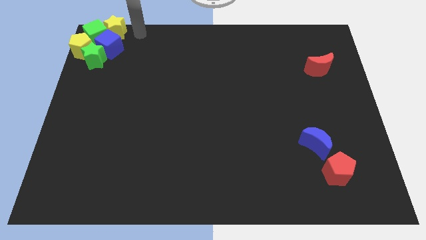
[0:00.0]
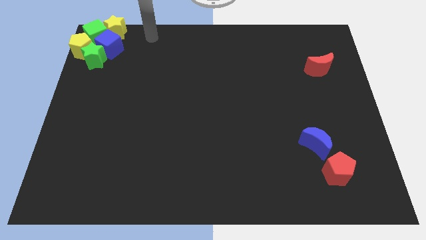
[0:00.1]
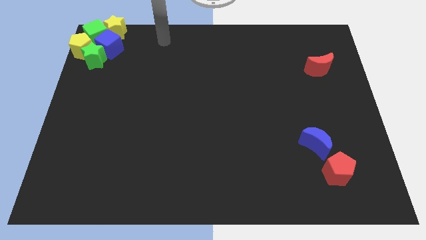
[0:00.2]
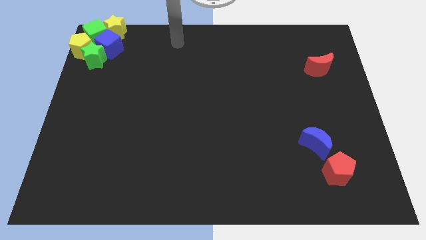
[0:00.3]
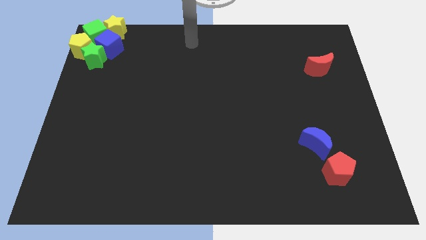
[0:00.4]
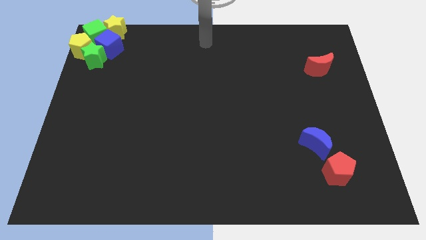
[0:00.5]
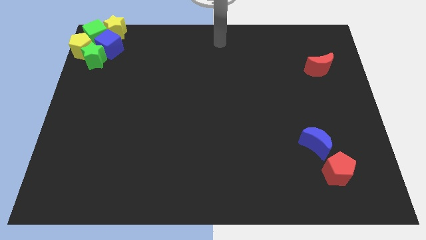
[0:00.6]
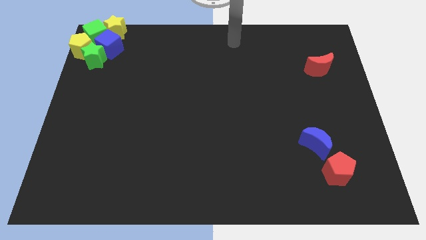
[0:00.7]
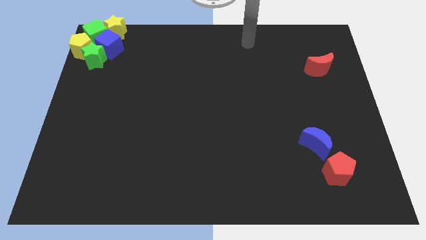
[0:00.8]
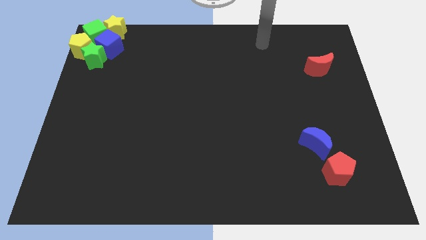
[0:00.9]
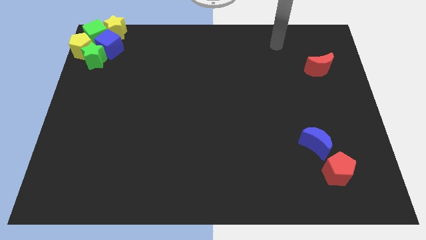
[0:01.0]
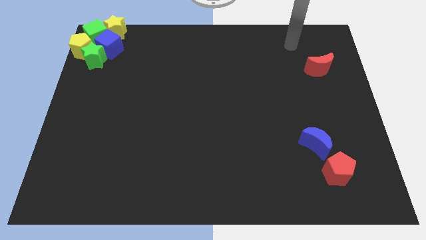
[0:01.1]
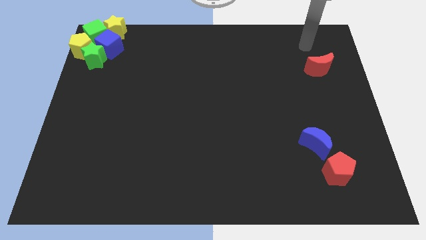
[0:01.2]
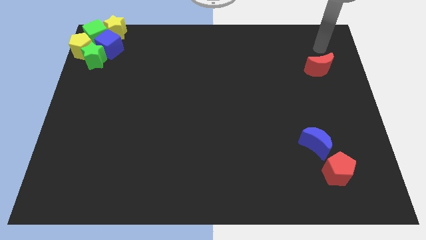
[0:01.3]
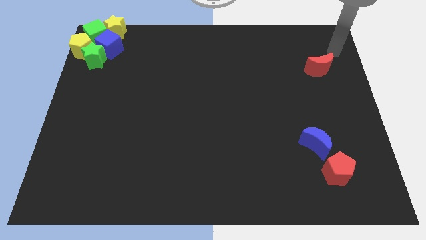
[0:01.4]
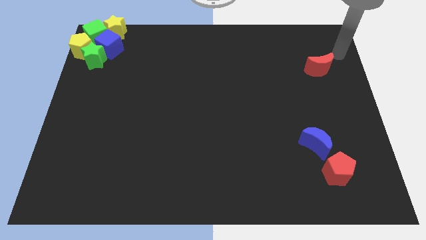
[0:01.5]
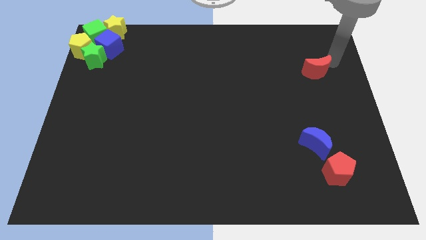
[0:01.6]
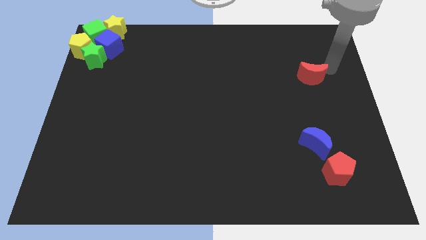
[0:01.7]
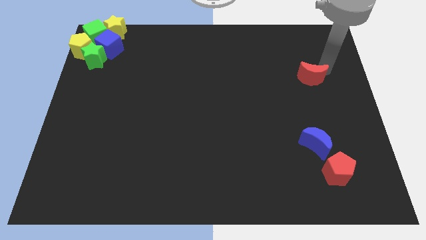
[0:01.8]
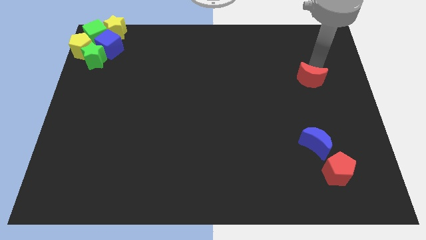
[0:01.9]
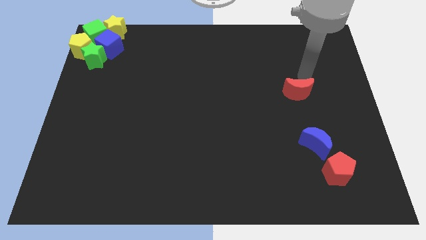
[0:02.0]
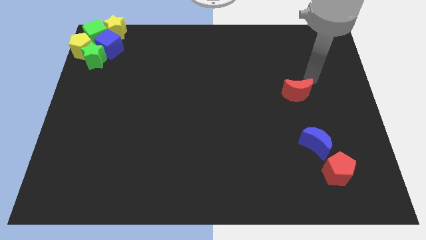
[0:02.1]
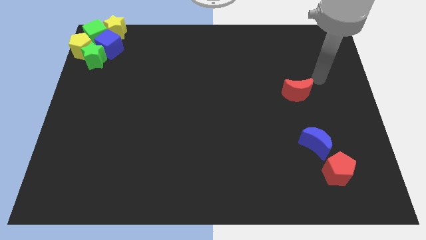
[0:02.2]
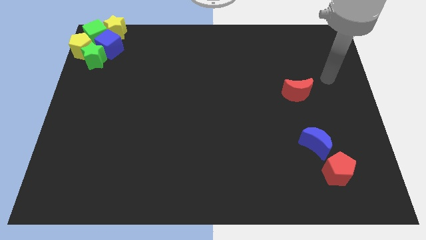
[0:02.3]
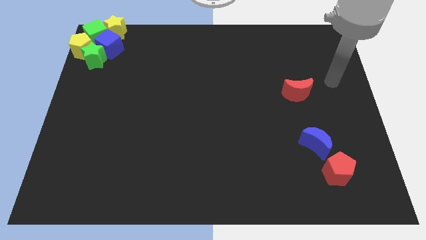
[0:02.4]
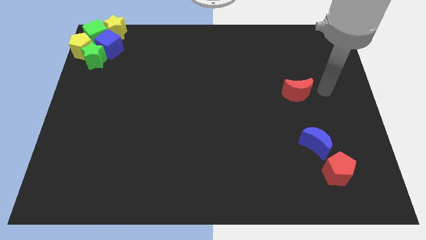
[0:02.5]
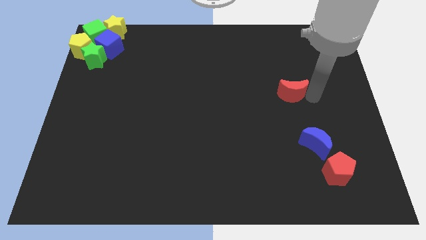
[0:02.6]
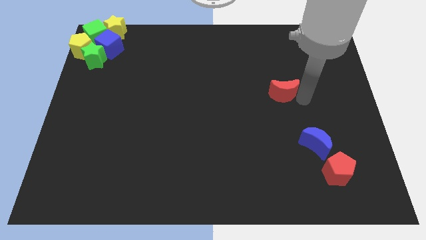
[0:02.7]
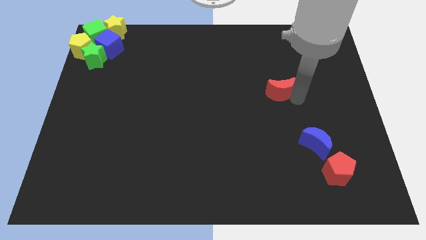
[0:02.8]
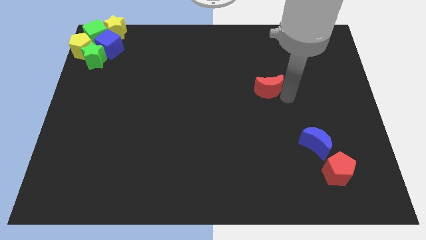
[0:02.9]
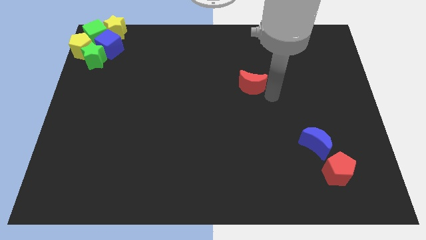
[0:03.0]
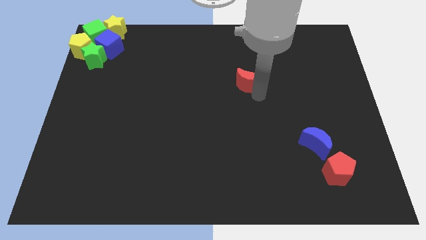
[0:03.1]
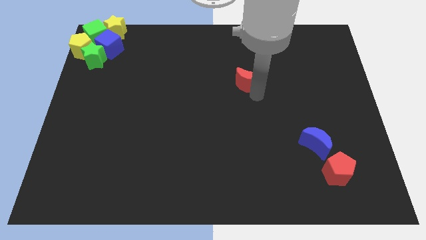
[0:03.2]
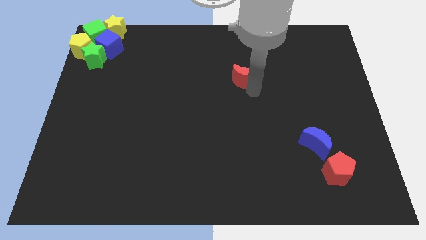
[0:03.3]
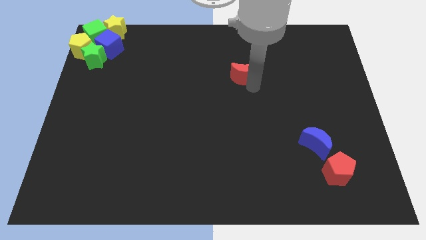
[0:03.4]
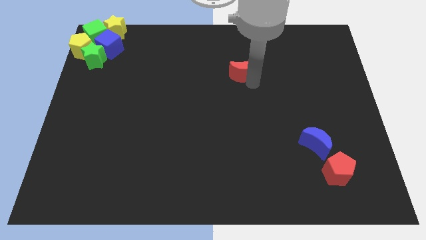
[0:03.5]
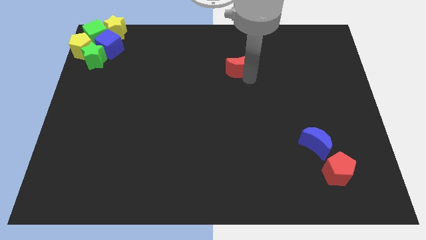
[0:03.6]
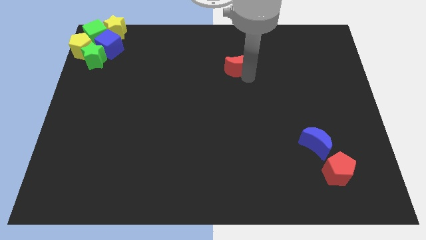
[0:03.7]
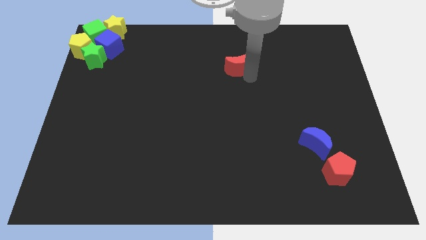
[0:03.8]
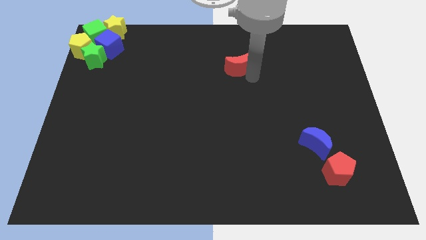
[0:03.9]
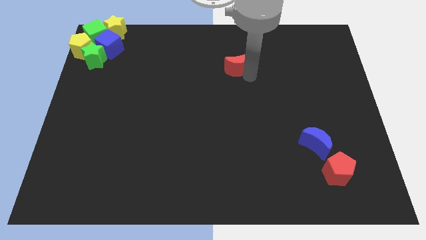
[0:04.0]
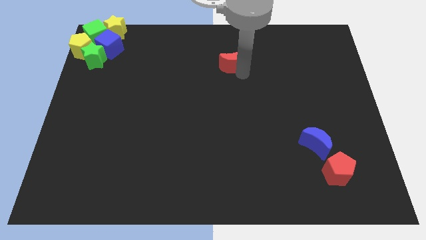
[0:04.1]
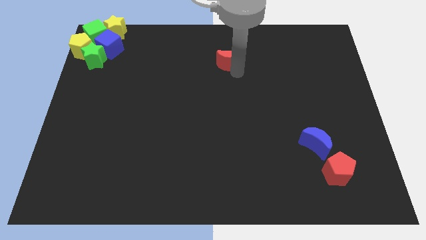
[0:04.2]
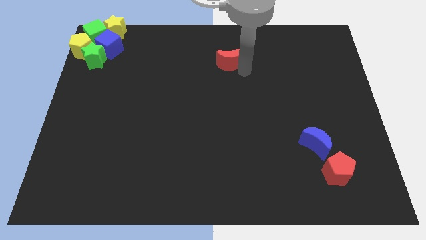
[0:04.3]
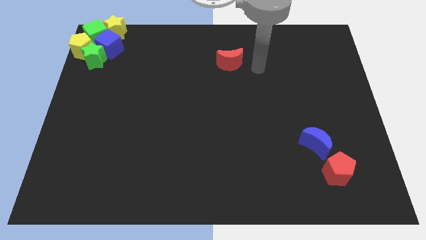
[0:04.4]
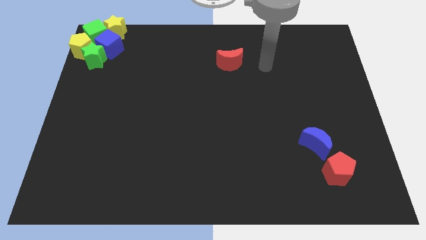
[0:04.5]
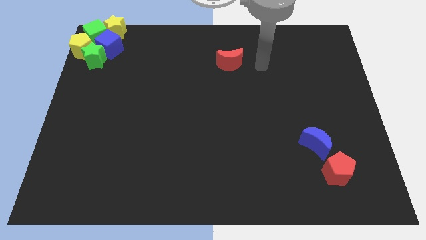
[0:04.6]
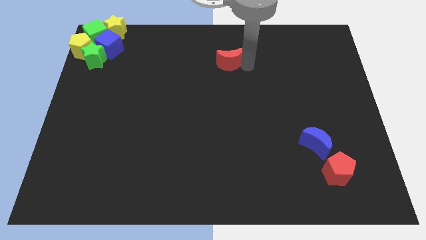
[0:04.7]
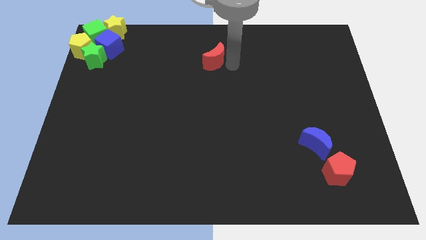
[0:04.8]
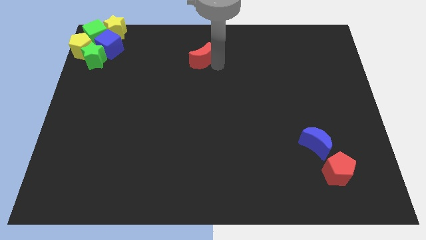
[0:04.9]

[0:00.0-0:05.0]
push the red crescent towards the top center side

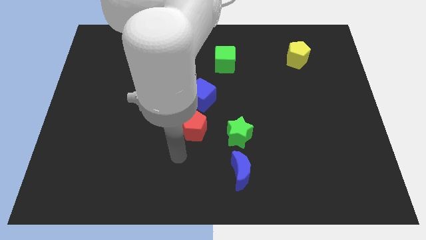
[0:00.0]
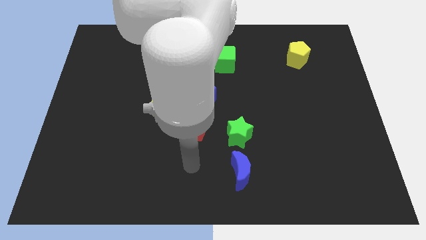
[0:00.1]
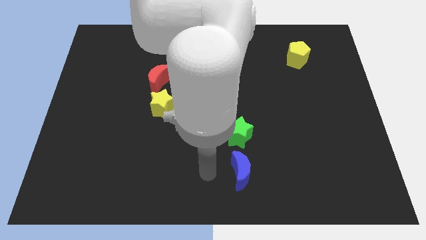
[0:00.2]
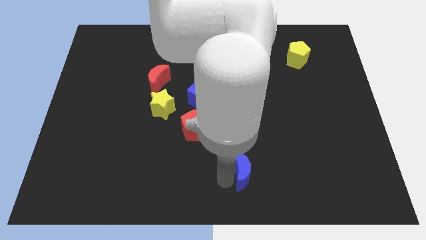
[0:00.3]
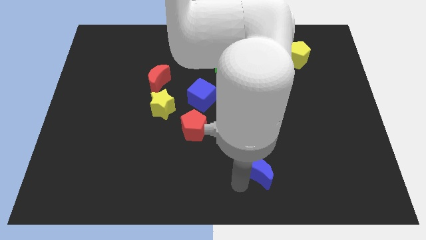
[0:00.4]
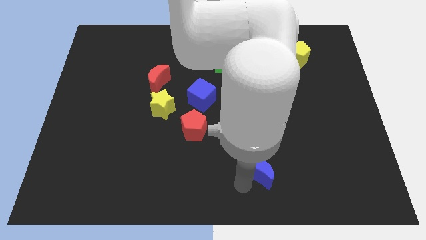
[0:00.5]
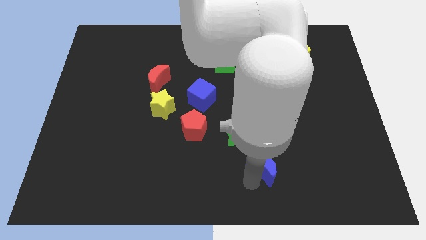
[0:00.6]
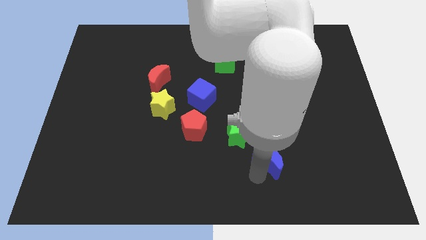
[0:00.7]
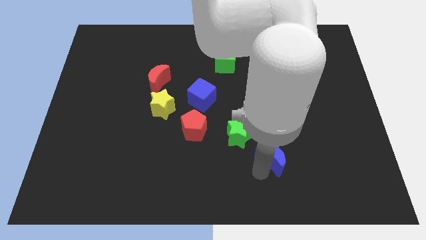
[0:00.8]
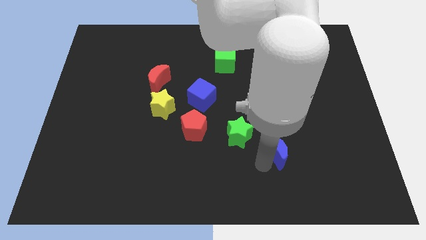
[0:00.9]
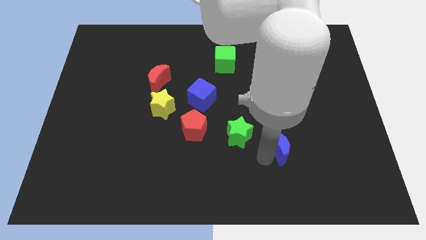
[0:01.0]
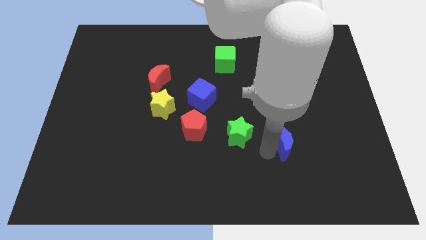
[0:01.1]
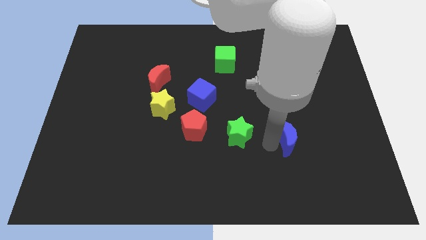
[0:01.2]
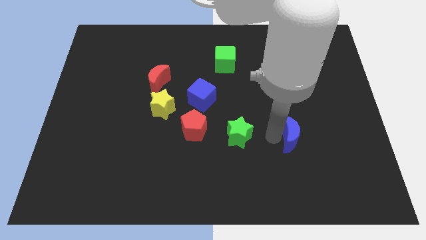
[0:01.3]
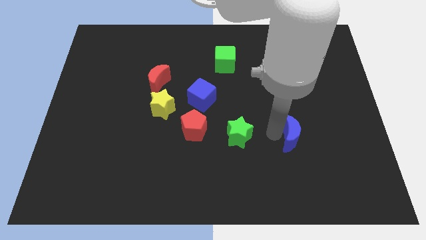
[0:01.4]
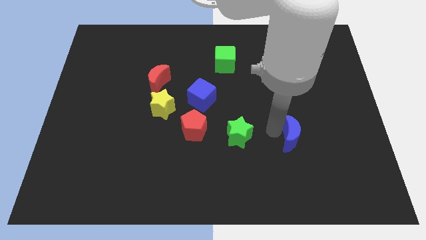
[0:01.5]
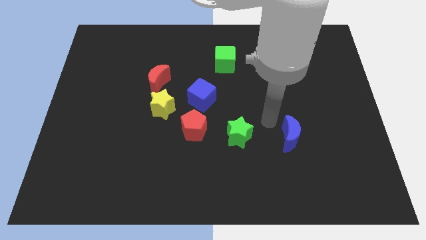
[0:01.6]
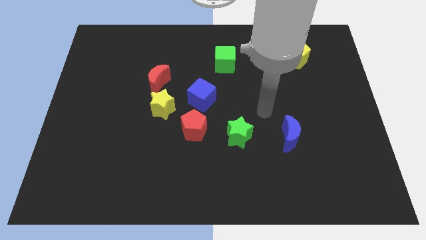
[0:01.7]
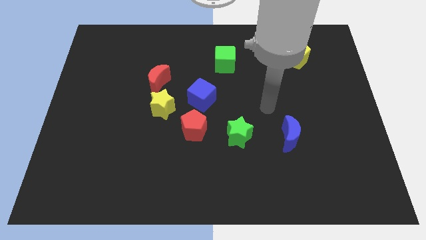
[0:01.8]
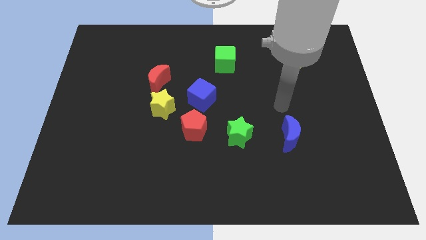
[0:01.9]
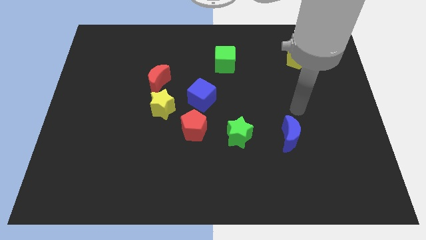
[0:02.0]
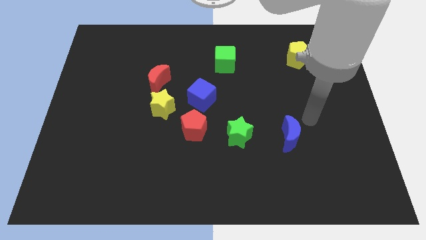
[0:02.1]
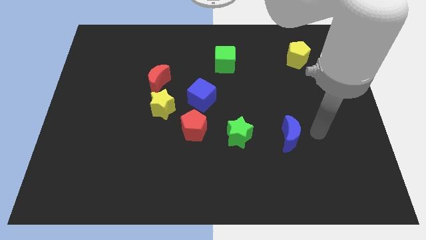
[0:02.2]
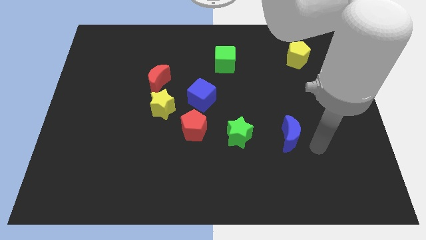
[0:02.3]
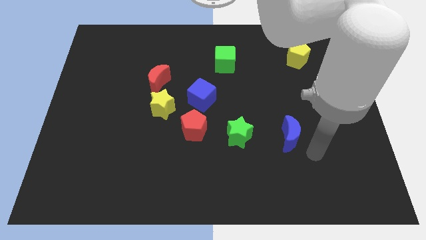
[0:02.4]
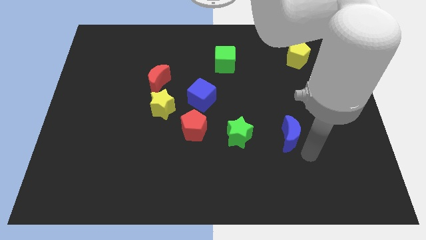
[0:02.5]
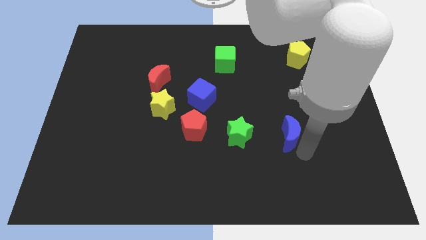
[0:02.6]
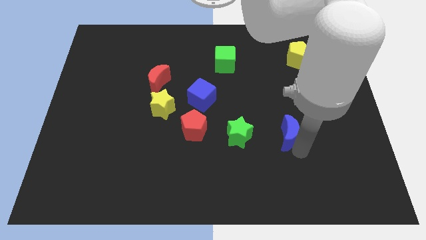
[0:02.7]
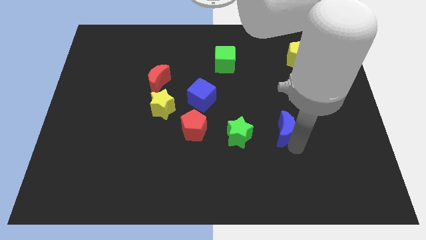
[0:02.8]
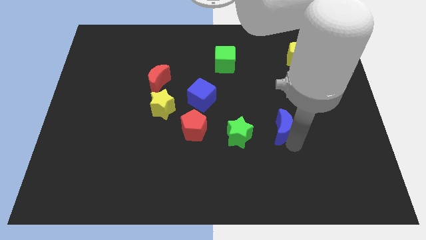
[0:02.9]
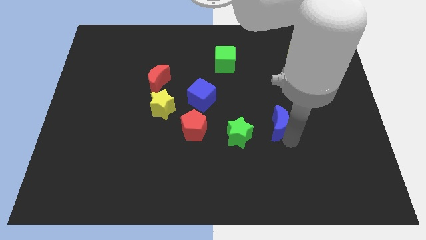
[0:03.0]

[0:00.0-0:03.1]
move the blue moon diagonally top right to green star

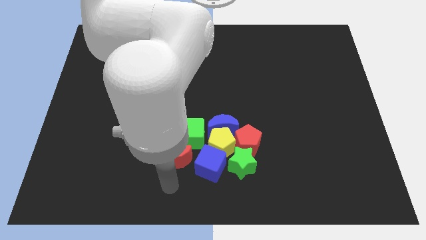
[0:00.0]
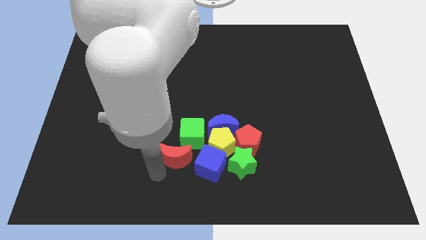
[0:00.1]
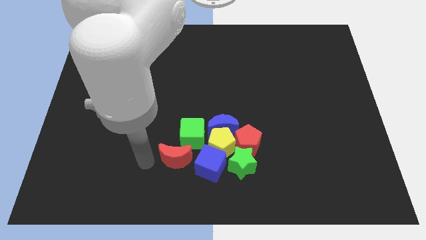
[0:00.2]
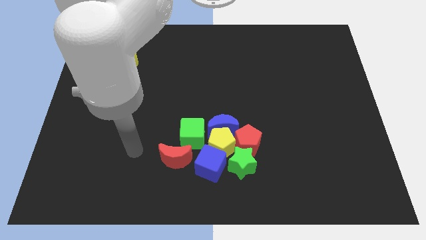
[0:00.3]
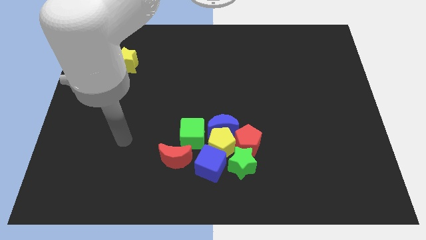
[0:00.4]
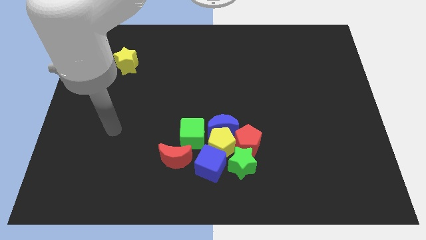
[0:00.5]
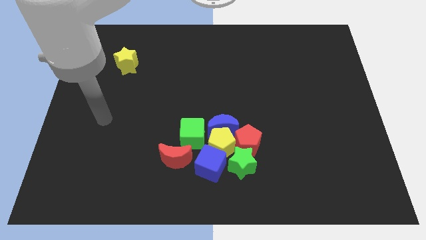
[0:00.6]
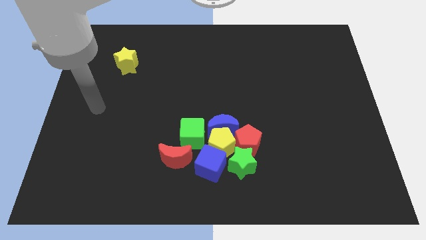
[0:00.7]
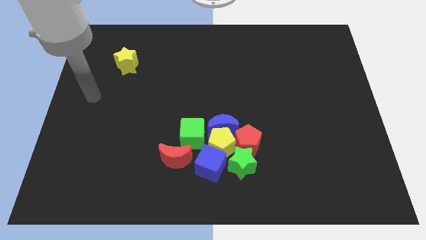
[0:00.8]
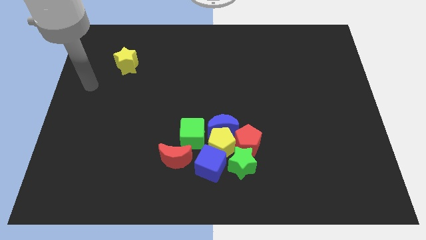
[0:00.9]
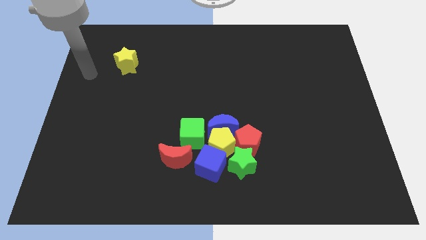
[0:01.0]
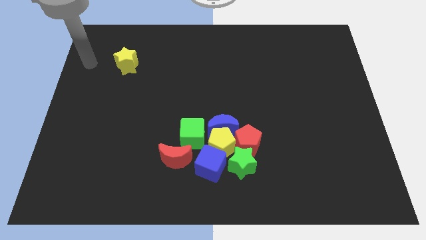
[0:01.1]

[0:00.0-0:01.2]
move your arm left to the yellow star
